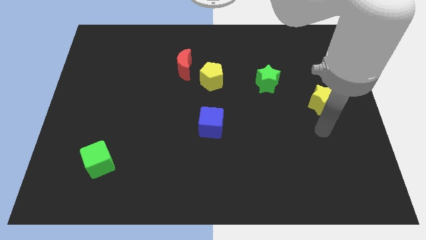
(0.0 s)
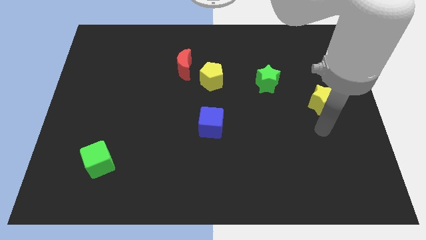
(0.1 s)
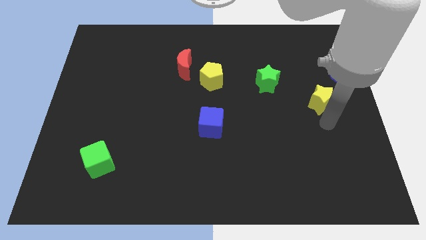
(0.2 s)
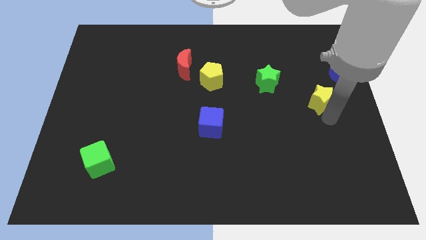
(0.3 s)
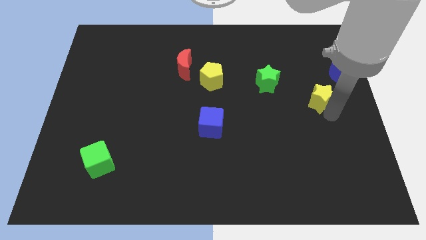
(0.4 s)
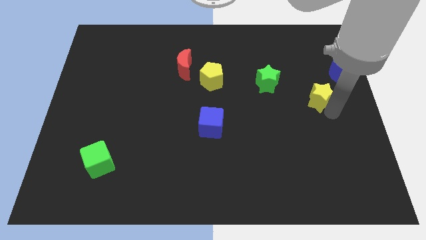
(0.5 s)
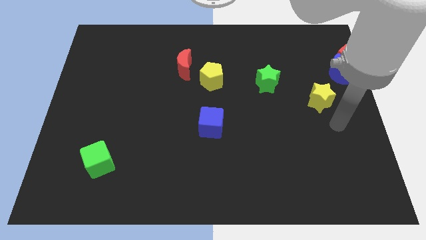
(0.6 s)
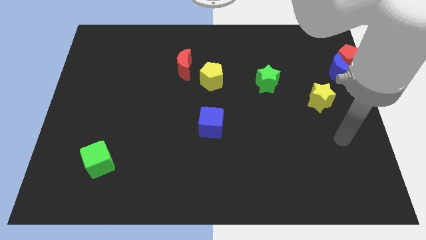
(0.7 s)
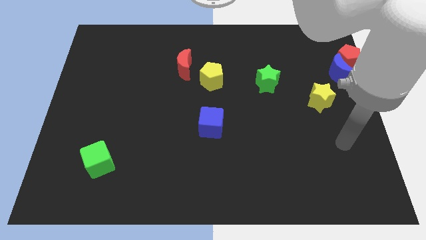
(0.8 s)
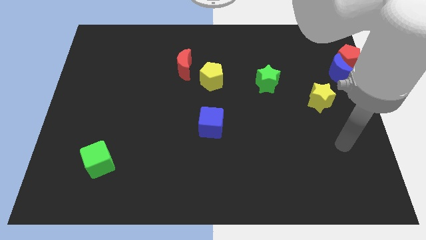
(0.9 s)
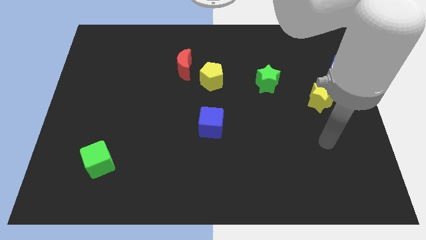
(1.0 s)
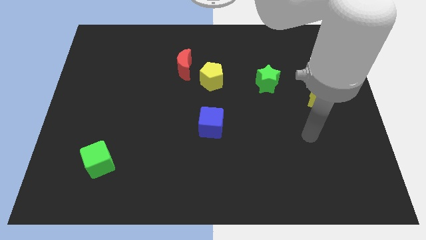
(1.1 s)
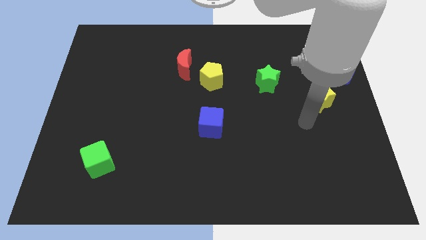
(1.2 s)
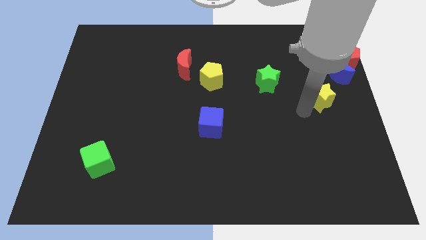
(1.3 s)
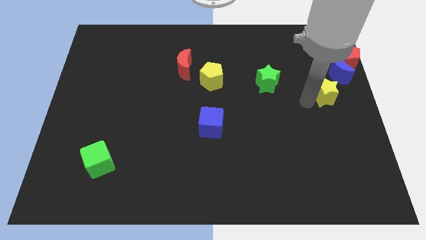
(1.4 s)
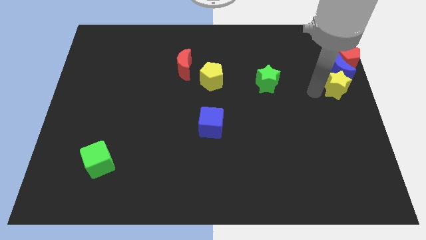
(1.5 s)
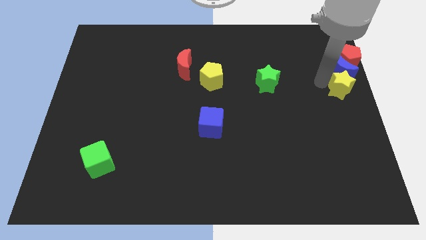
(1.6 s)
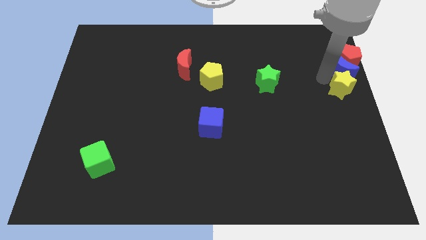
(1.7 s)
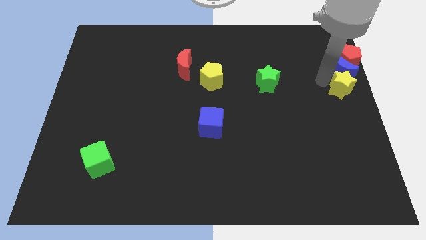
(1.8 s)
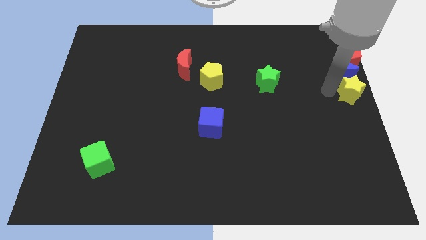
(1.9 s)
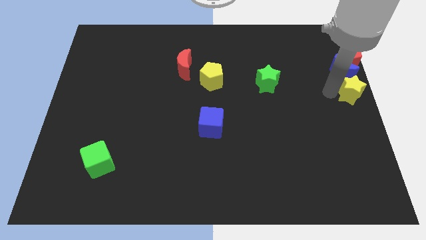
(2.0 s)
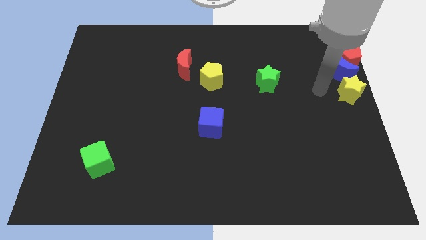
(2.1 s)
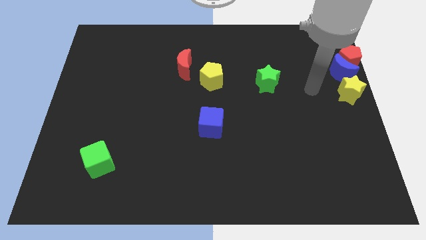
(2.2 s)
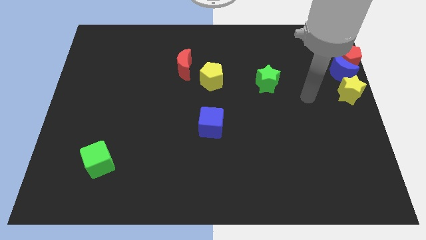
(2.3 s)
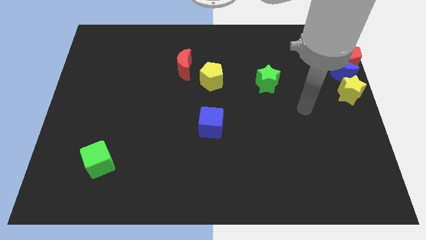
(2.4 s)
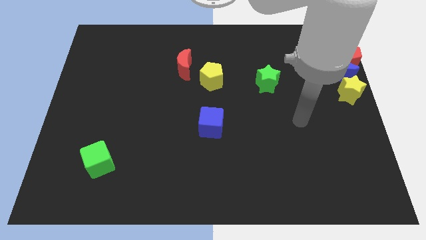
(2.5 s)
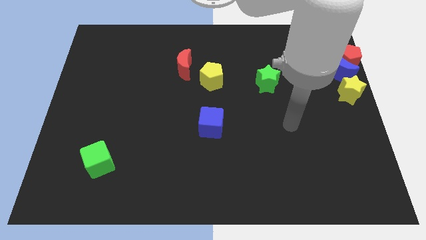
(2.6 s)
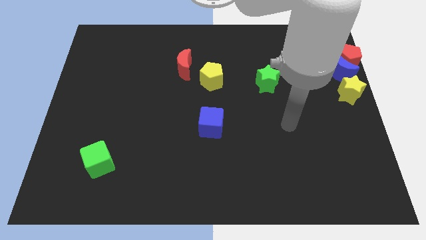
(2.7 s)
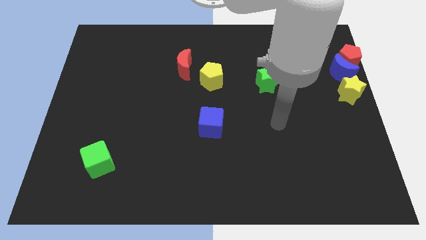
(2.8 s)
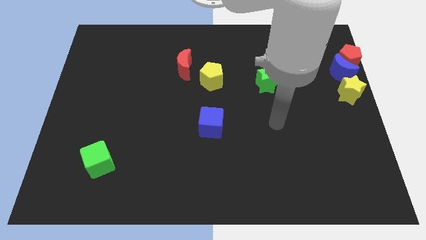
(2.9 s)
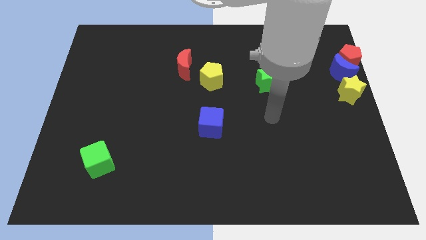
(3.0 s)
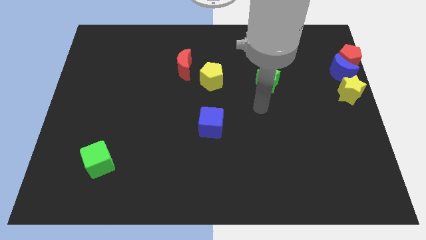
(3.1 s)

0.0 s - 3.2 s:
slide the yellow star below the blue crescent

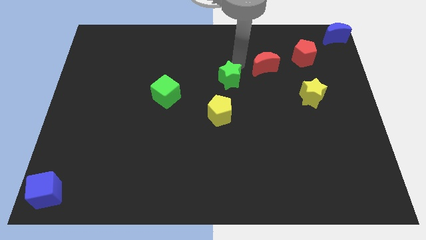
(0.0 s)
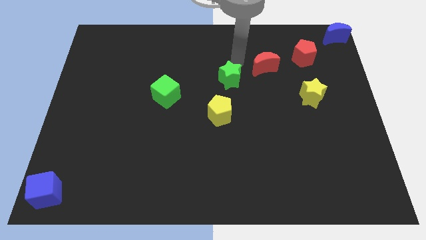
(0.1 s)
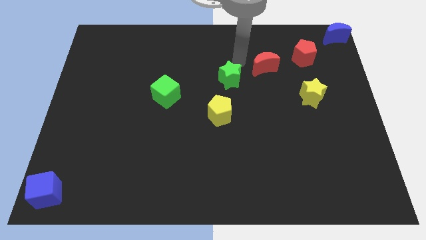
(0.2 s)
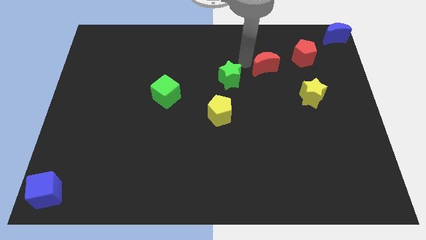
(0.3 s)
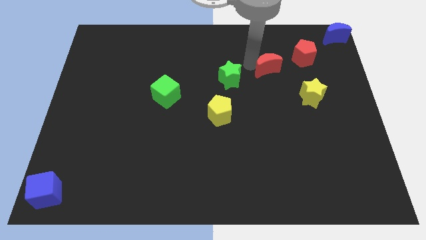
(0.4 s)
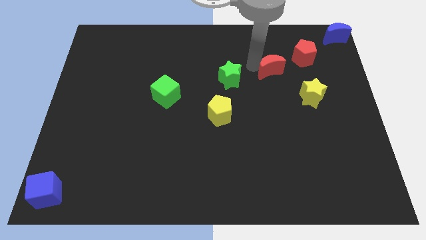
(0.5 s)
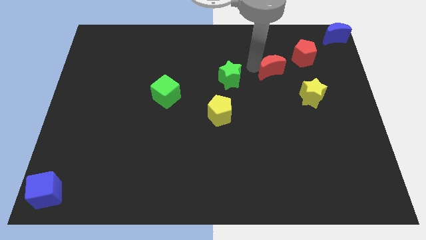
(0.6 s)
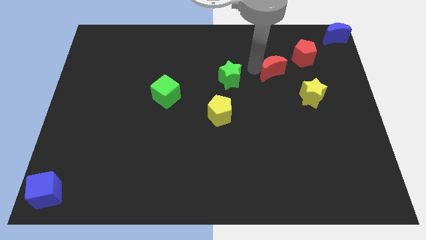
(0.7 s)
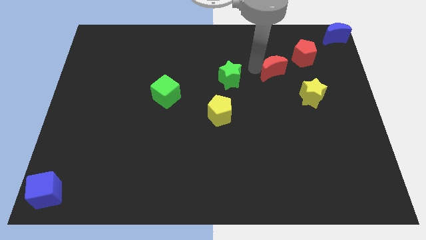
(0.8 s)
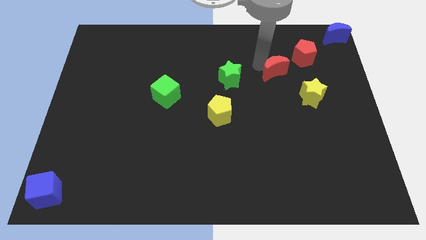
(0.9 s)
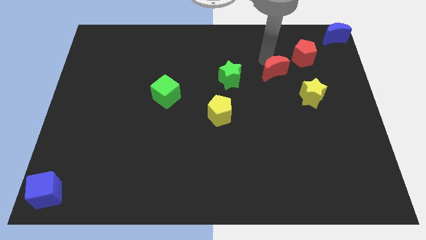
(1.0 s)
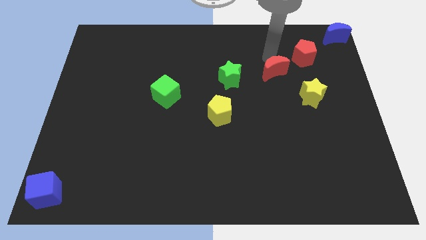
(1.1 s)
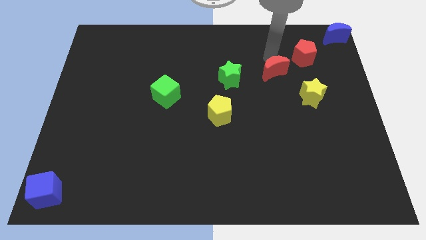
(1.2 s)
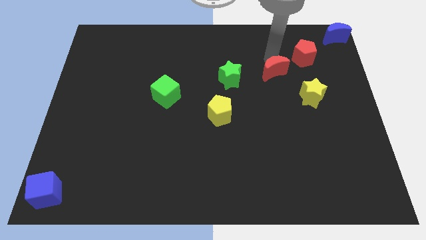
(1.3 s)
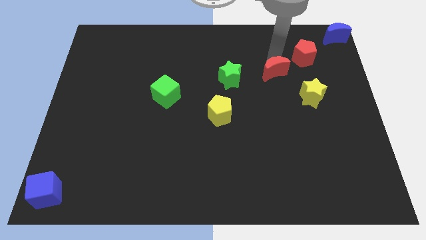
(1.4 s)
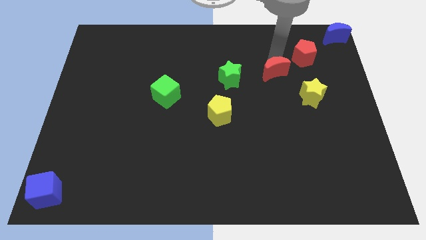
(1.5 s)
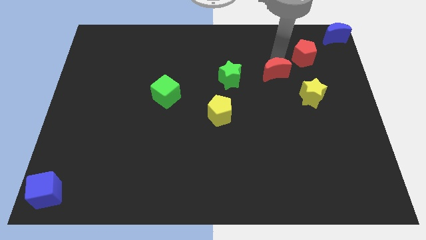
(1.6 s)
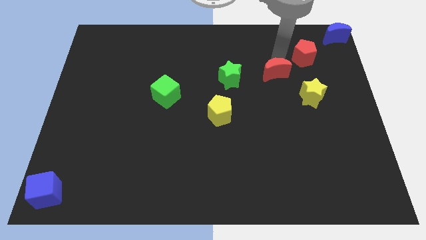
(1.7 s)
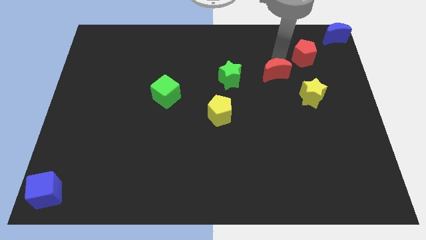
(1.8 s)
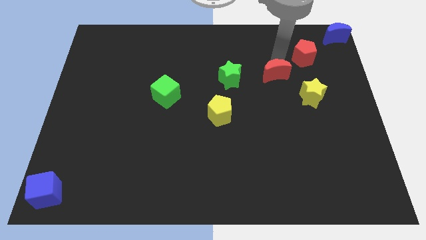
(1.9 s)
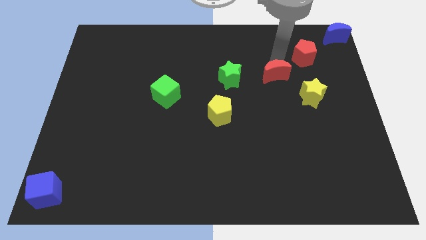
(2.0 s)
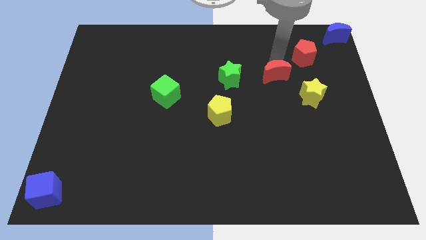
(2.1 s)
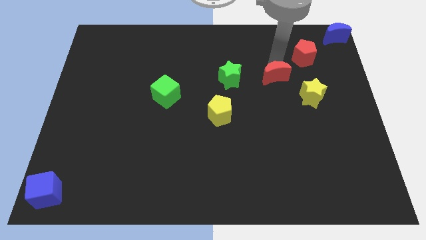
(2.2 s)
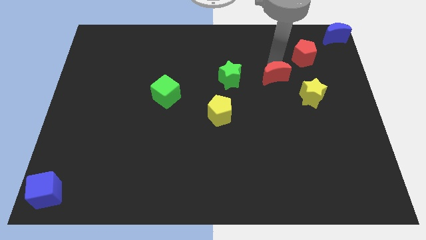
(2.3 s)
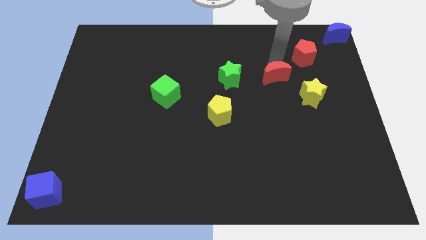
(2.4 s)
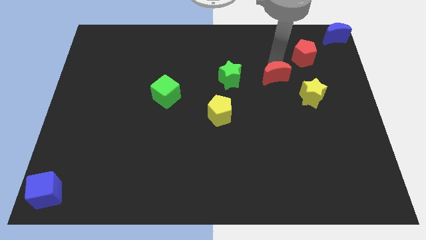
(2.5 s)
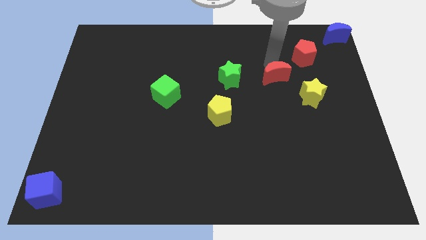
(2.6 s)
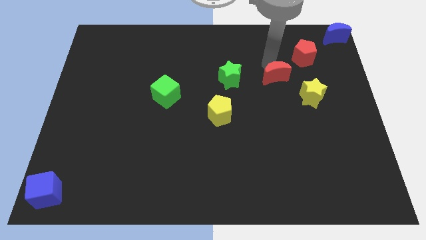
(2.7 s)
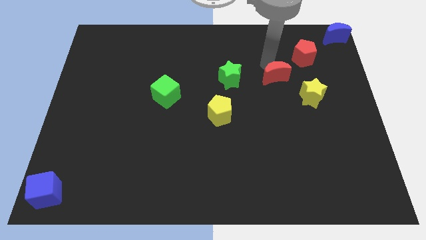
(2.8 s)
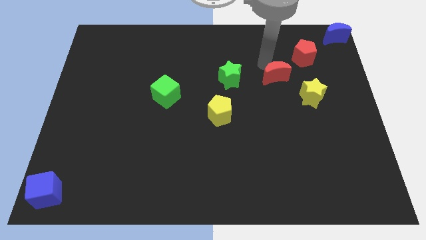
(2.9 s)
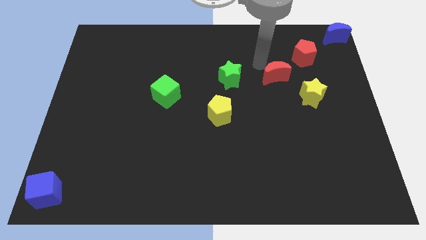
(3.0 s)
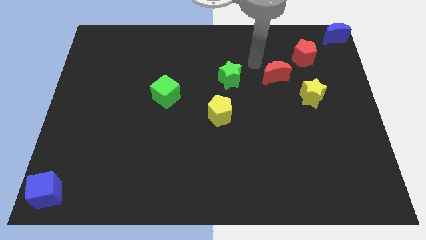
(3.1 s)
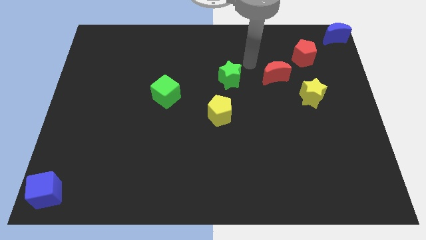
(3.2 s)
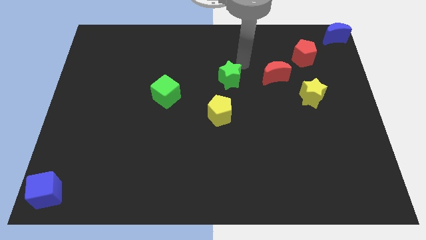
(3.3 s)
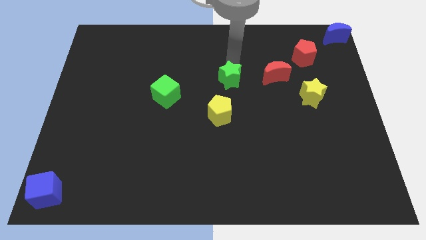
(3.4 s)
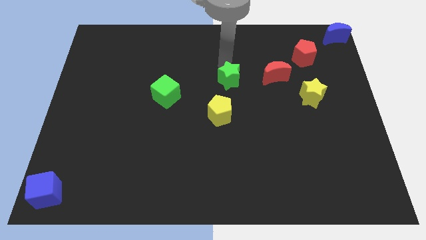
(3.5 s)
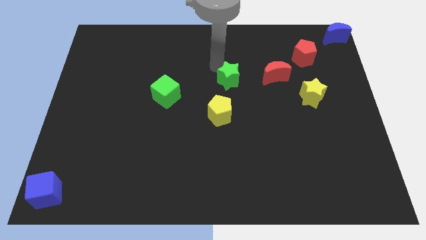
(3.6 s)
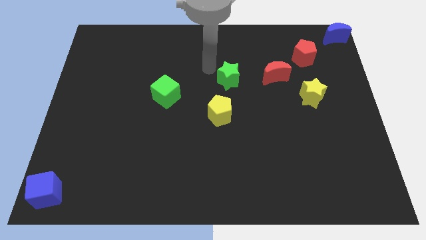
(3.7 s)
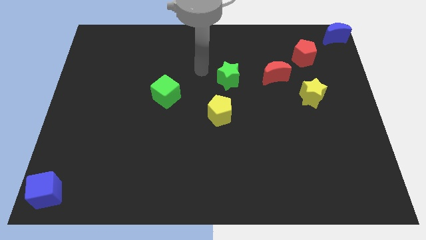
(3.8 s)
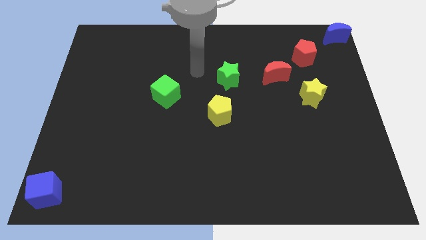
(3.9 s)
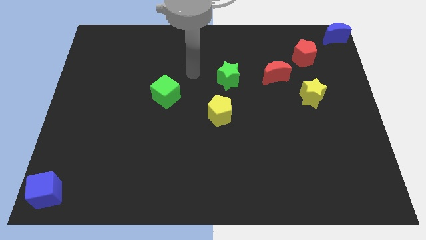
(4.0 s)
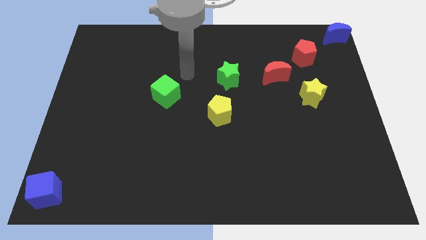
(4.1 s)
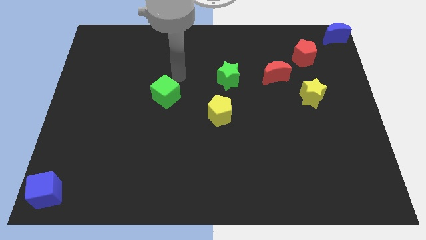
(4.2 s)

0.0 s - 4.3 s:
separate red crescent from green star

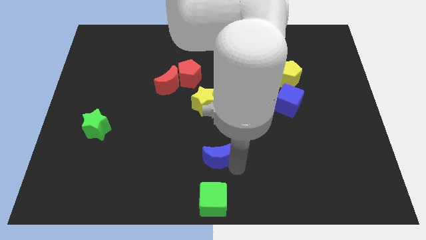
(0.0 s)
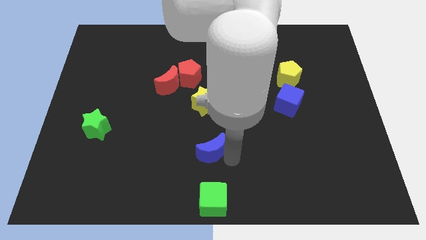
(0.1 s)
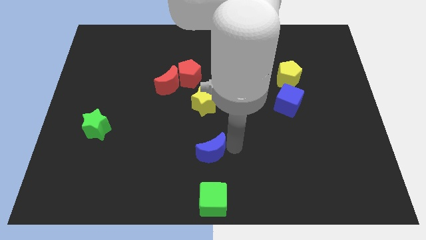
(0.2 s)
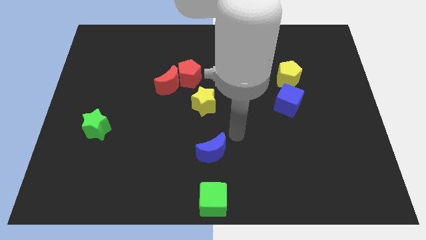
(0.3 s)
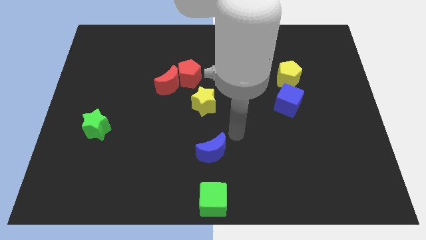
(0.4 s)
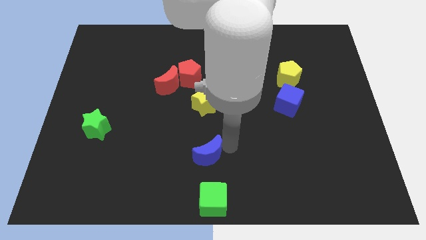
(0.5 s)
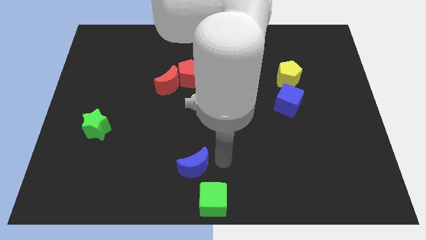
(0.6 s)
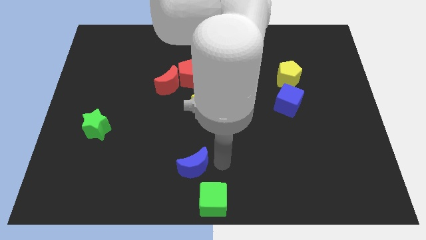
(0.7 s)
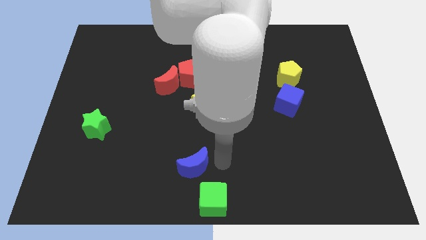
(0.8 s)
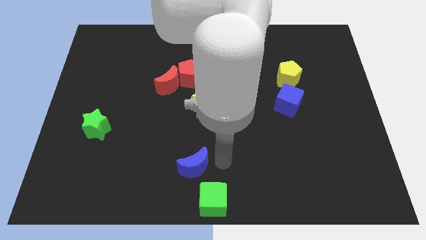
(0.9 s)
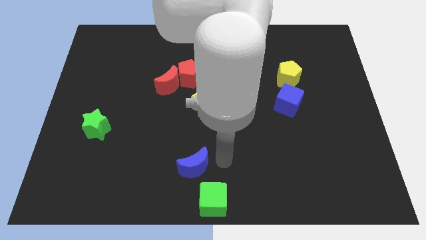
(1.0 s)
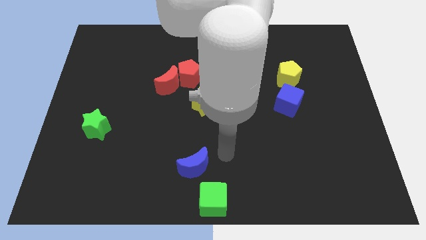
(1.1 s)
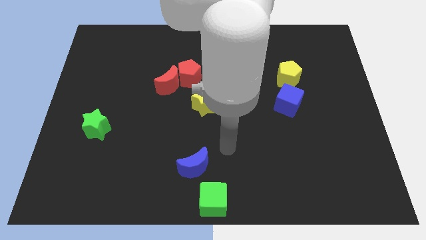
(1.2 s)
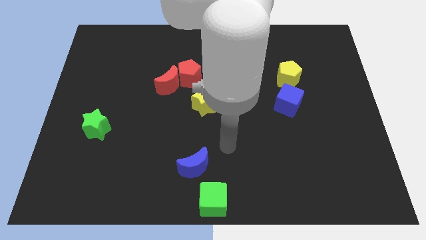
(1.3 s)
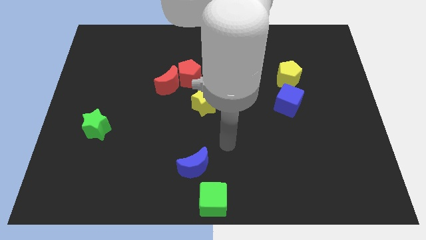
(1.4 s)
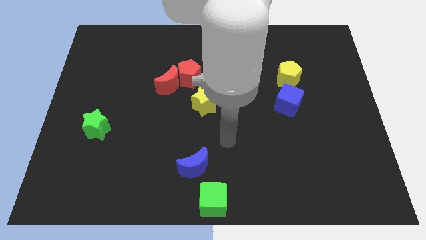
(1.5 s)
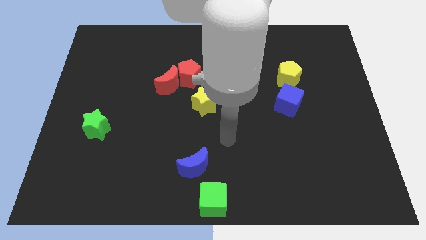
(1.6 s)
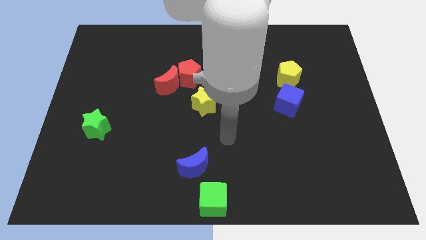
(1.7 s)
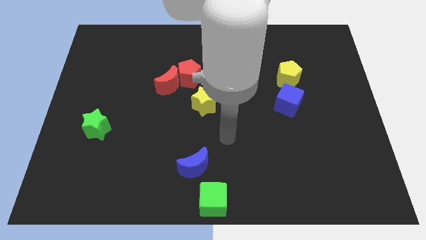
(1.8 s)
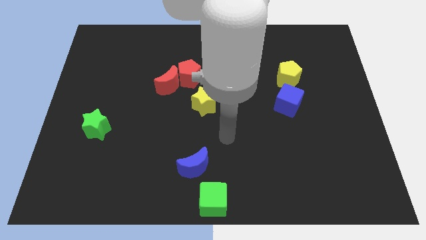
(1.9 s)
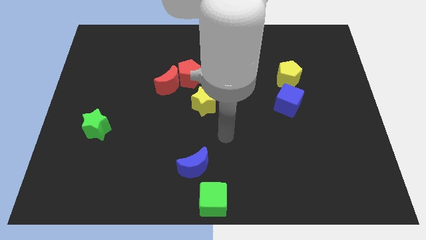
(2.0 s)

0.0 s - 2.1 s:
slide the blue crescent at the top left of the green cube
